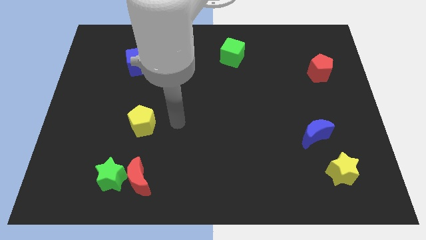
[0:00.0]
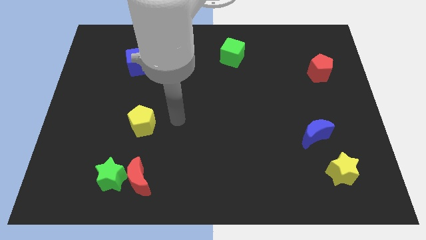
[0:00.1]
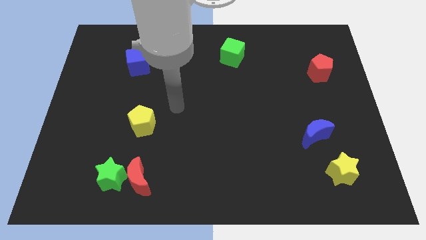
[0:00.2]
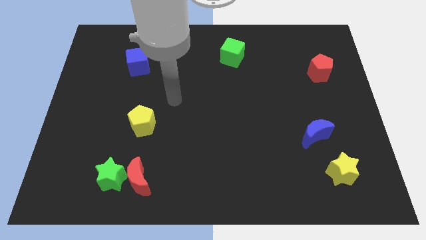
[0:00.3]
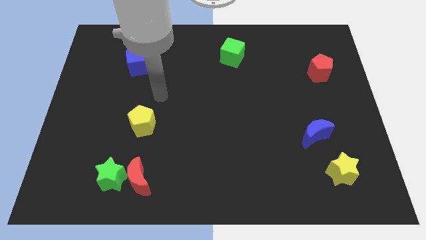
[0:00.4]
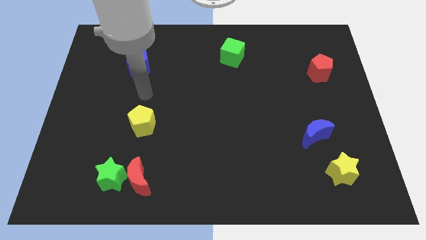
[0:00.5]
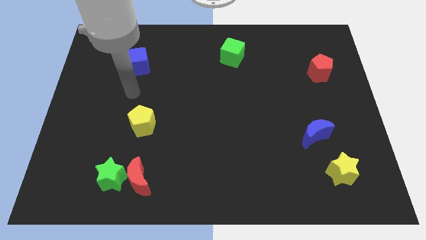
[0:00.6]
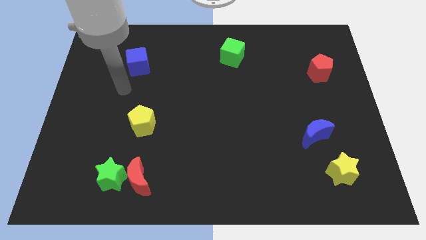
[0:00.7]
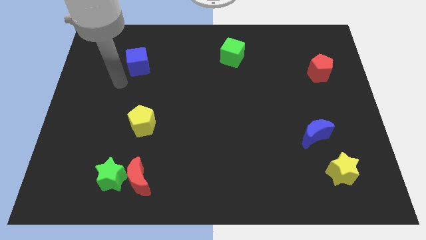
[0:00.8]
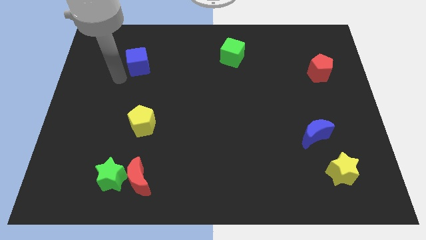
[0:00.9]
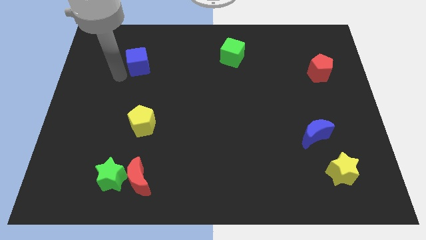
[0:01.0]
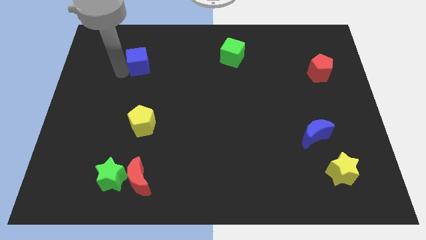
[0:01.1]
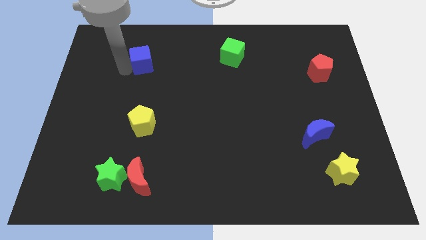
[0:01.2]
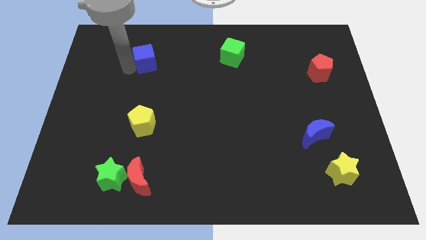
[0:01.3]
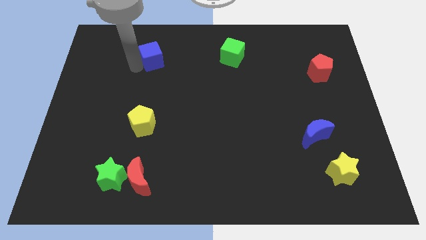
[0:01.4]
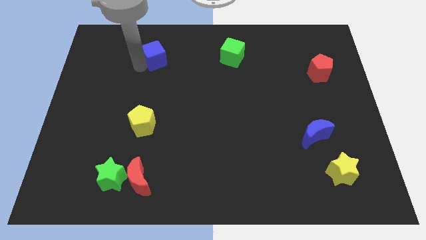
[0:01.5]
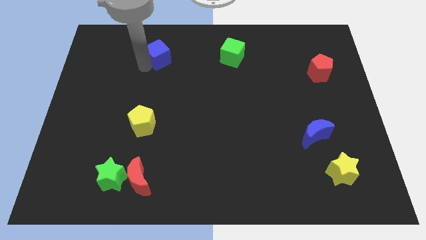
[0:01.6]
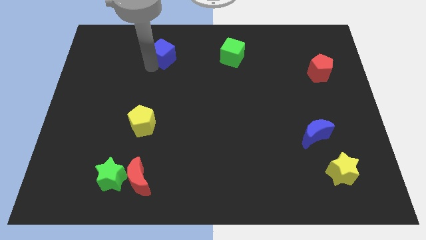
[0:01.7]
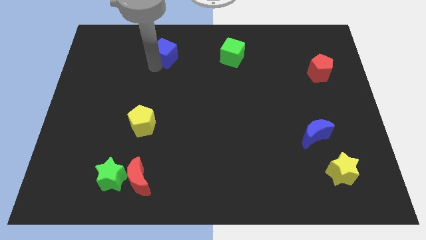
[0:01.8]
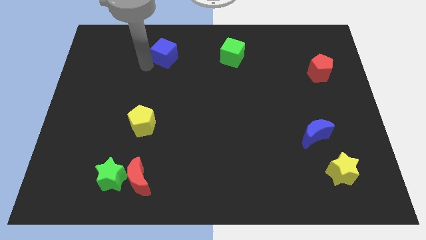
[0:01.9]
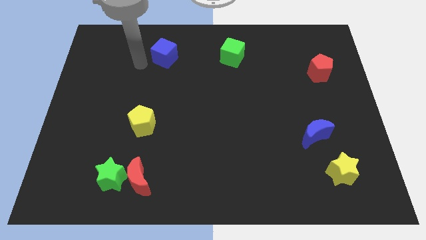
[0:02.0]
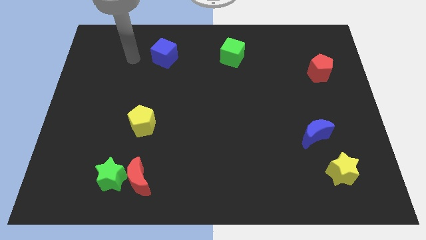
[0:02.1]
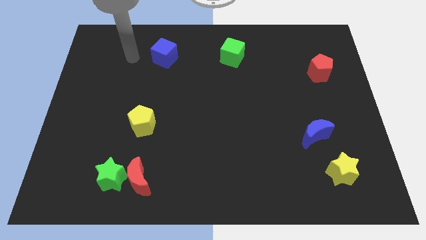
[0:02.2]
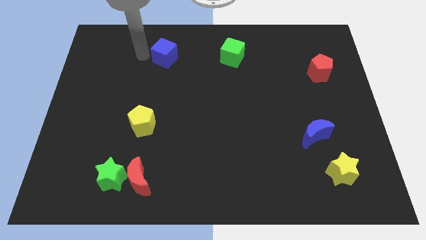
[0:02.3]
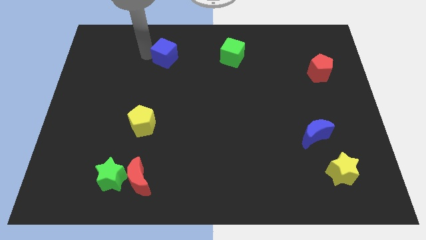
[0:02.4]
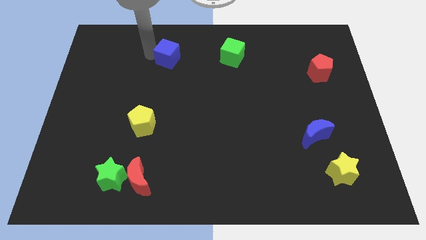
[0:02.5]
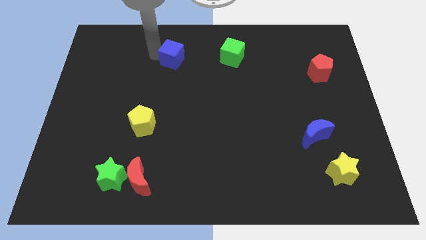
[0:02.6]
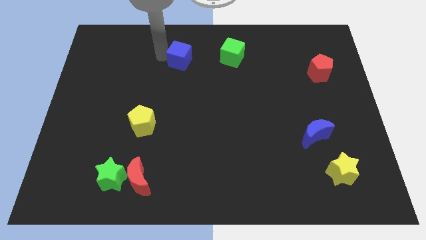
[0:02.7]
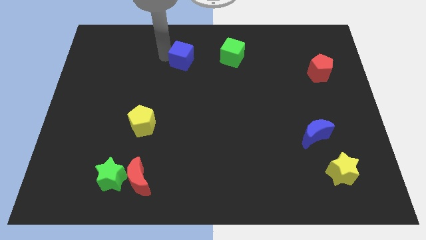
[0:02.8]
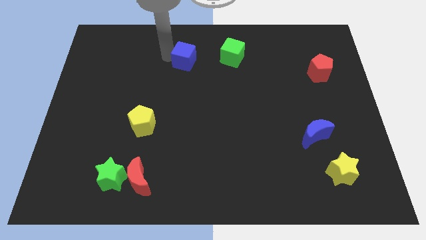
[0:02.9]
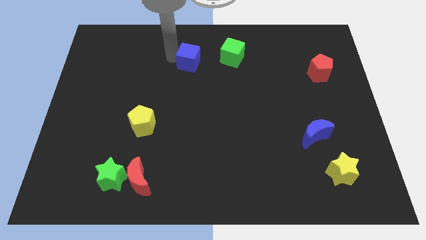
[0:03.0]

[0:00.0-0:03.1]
push the blue cube towards the left side of the green cube

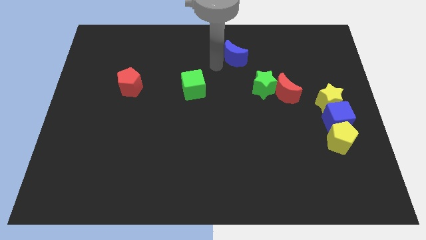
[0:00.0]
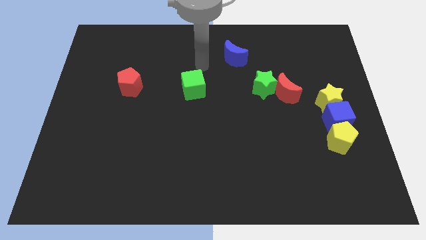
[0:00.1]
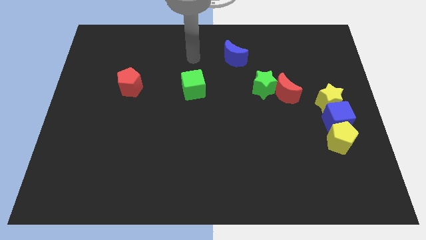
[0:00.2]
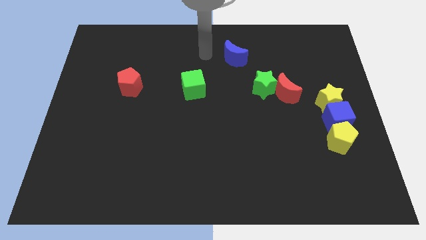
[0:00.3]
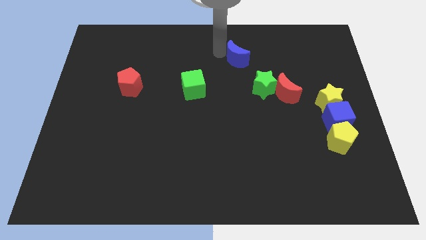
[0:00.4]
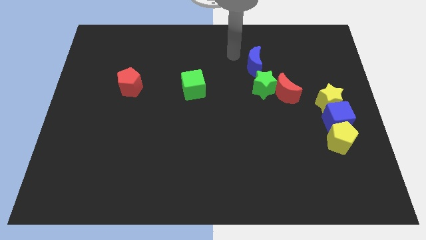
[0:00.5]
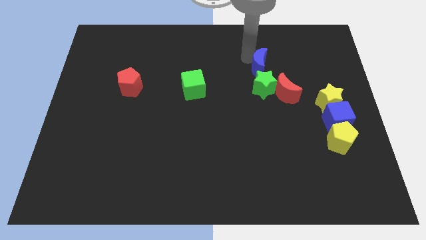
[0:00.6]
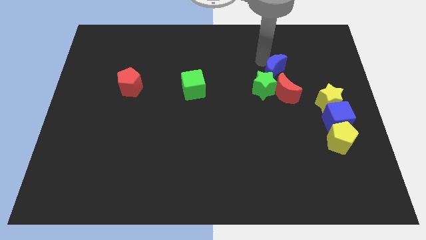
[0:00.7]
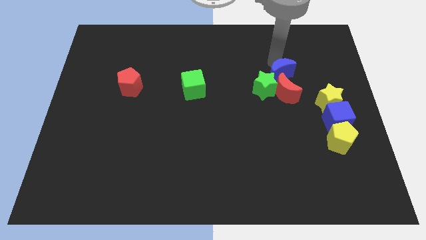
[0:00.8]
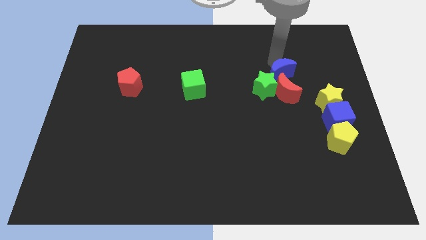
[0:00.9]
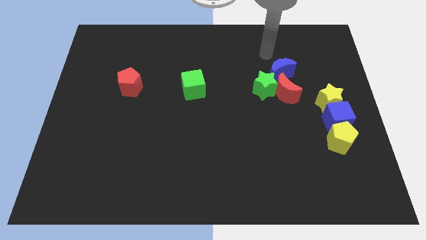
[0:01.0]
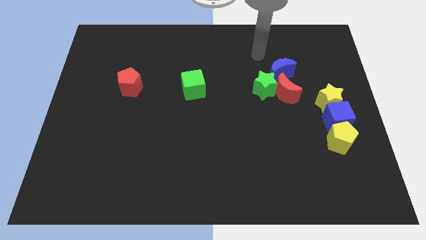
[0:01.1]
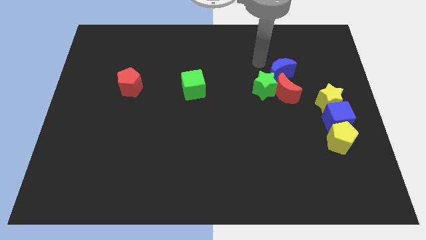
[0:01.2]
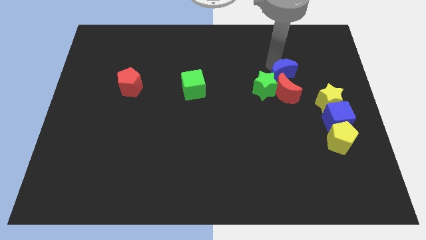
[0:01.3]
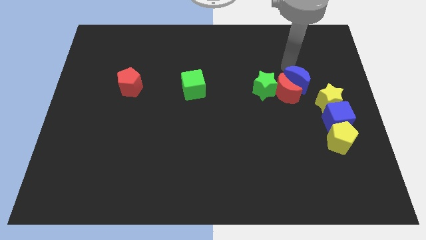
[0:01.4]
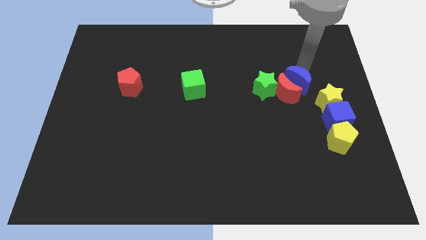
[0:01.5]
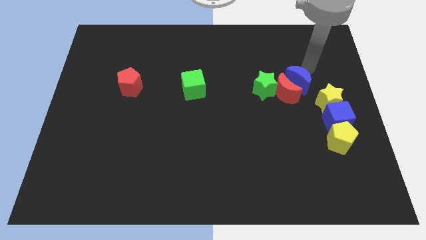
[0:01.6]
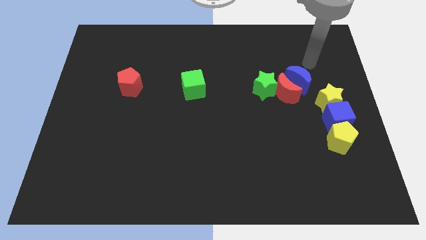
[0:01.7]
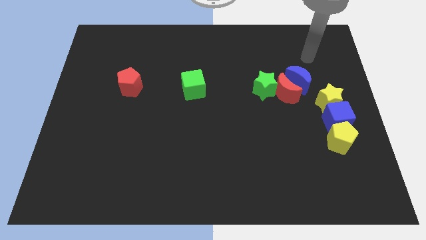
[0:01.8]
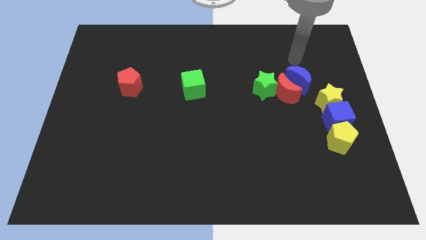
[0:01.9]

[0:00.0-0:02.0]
place the blue moon close to red moon

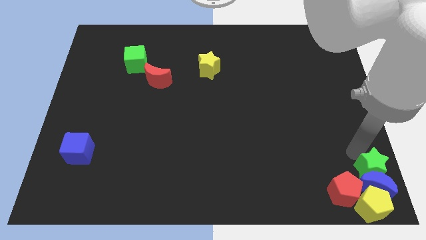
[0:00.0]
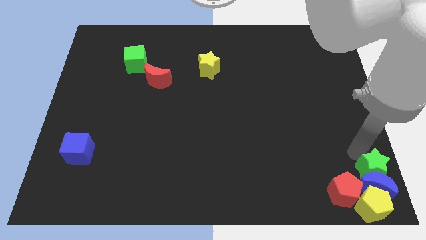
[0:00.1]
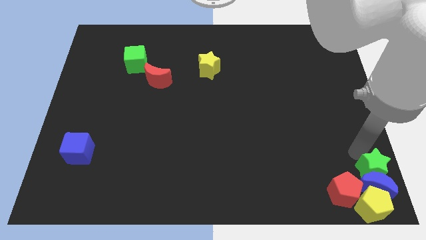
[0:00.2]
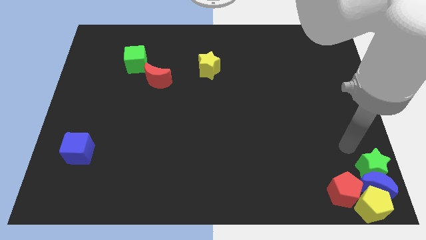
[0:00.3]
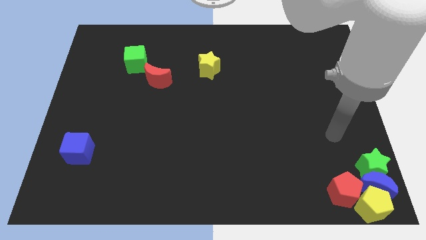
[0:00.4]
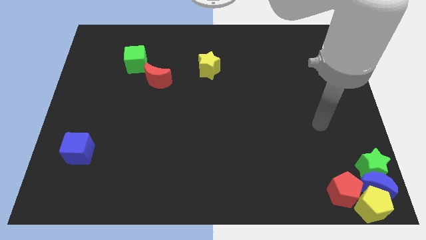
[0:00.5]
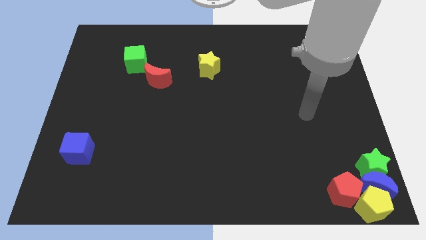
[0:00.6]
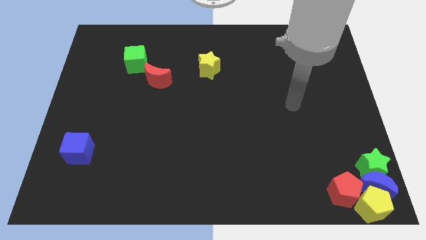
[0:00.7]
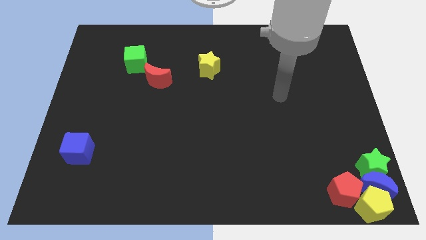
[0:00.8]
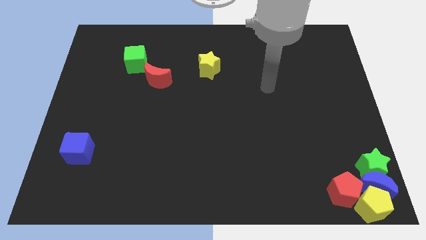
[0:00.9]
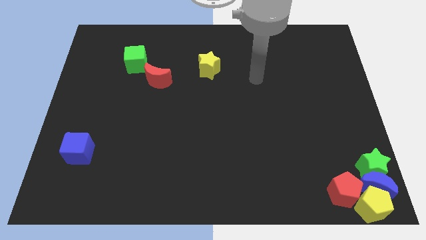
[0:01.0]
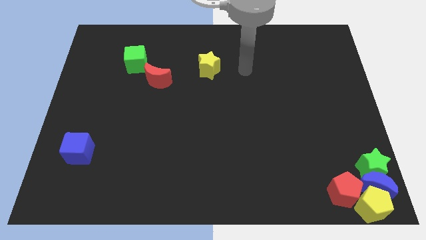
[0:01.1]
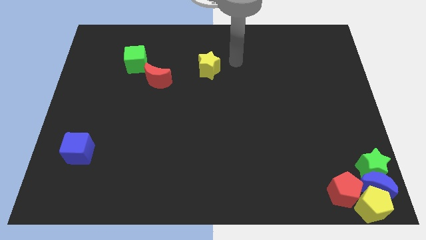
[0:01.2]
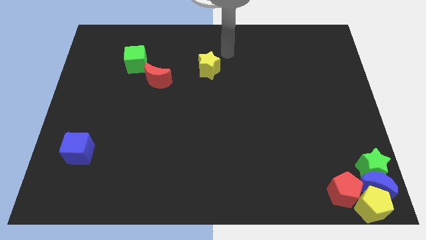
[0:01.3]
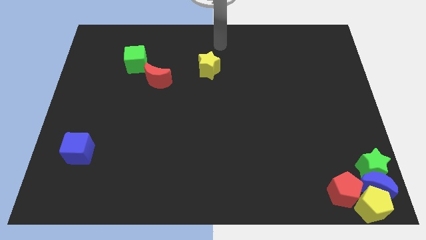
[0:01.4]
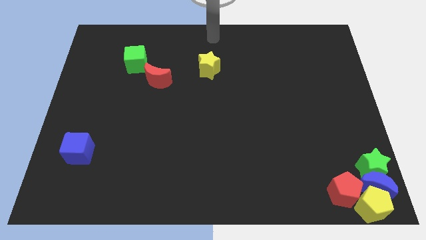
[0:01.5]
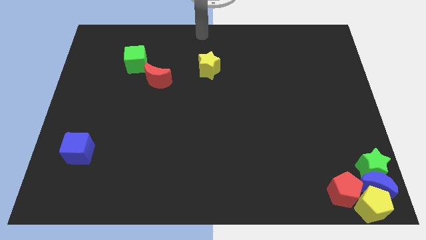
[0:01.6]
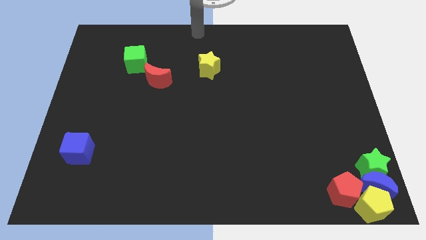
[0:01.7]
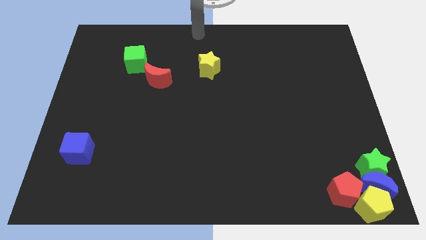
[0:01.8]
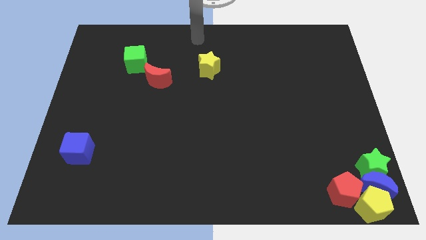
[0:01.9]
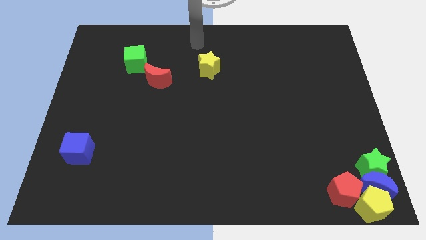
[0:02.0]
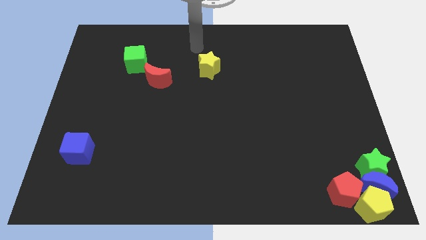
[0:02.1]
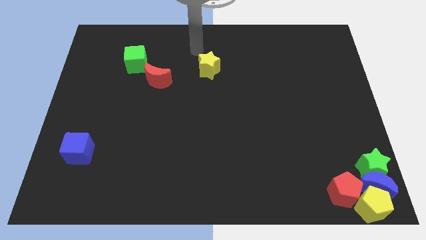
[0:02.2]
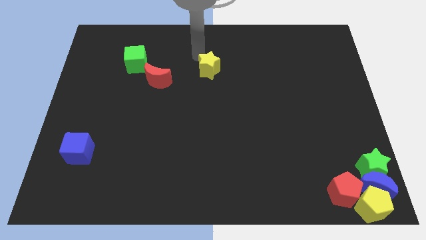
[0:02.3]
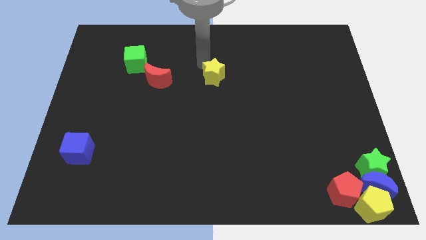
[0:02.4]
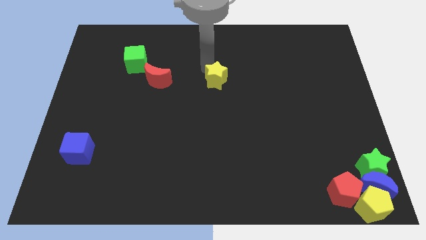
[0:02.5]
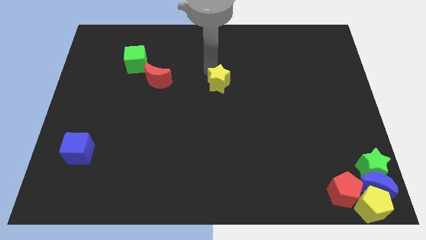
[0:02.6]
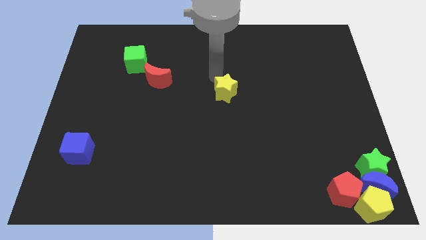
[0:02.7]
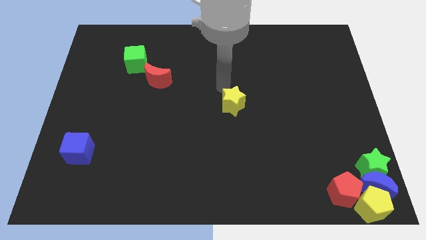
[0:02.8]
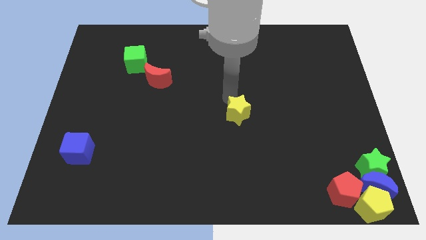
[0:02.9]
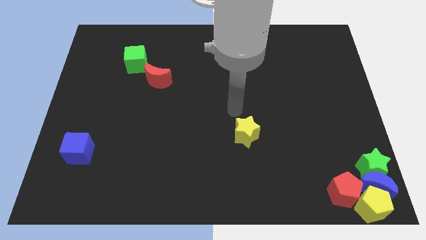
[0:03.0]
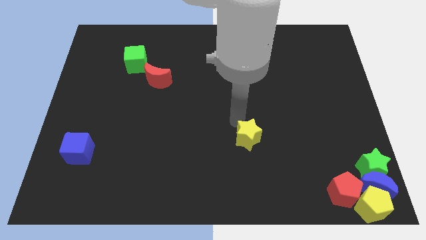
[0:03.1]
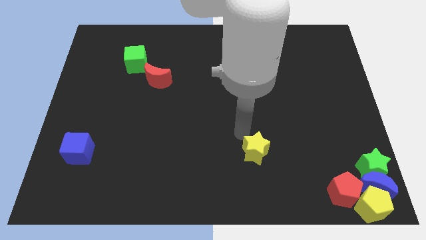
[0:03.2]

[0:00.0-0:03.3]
place the yellow star to the middle of the board

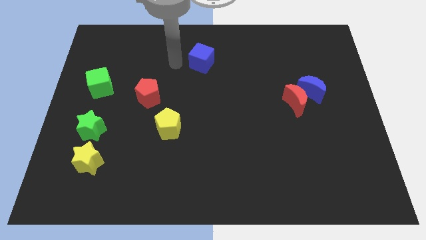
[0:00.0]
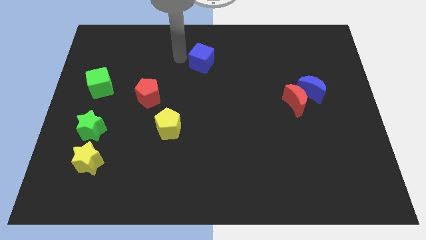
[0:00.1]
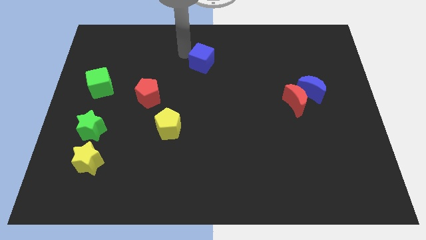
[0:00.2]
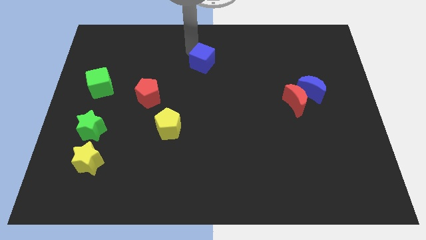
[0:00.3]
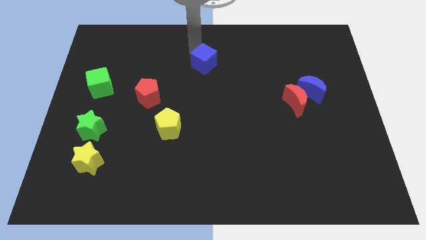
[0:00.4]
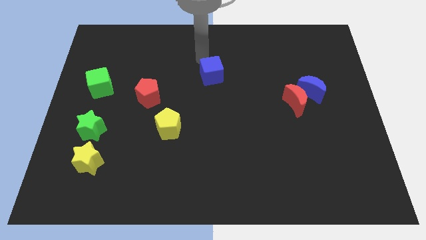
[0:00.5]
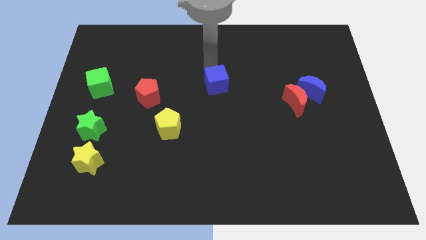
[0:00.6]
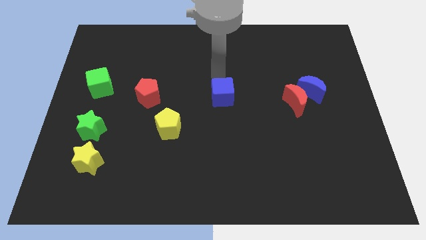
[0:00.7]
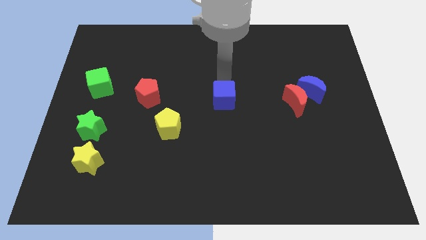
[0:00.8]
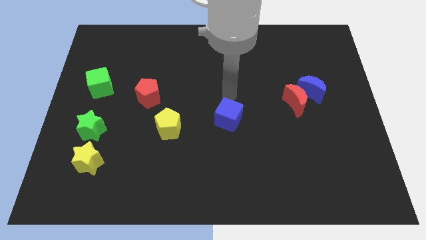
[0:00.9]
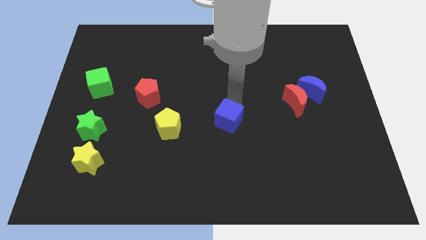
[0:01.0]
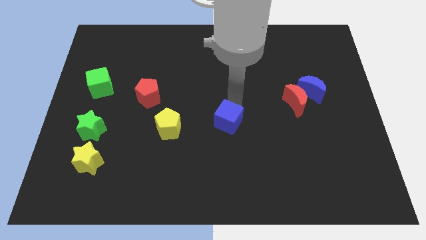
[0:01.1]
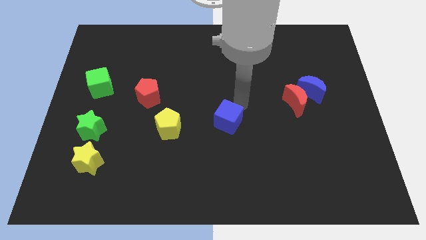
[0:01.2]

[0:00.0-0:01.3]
push the blue cube to the center of the board
